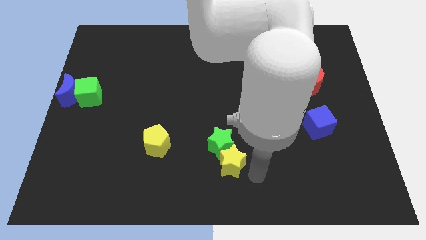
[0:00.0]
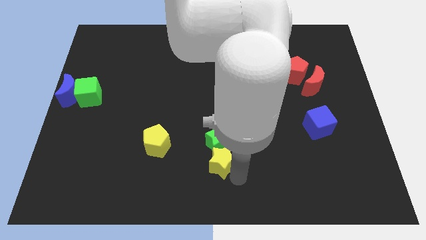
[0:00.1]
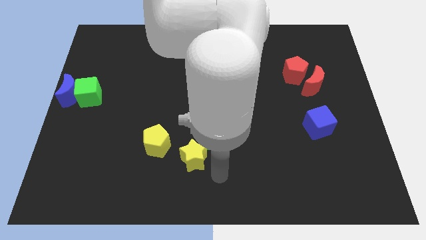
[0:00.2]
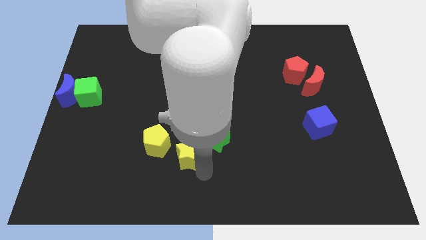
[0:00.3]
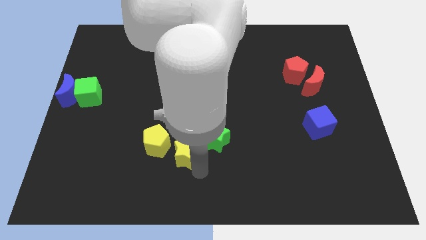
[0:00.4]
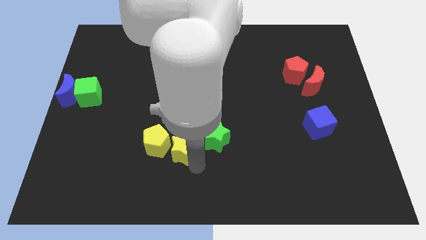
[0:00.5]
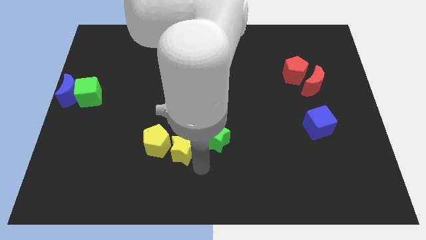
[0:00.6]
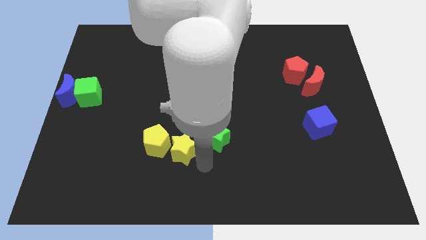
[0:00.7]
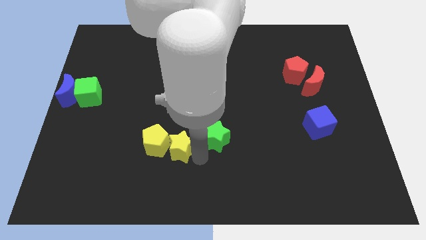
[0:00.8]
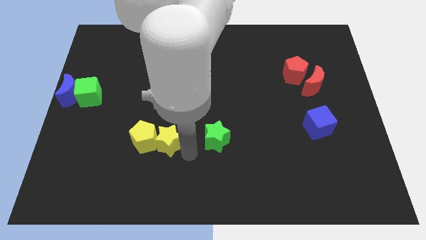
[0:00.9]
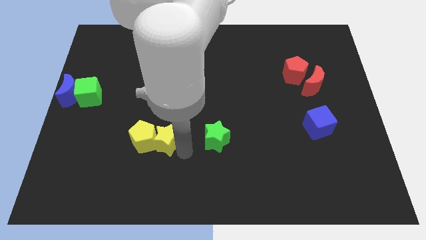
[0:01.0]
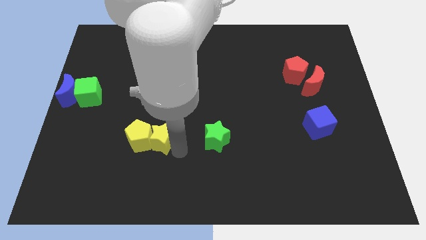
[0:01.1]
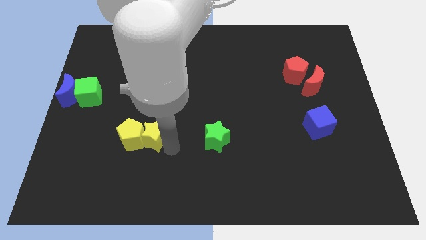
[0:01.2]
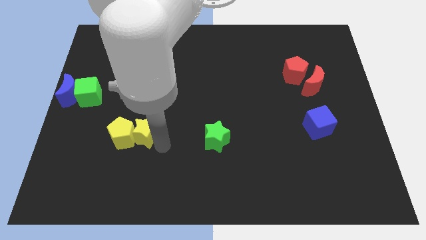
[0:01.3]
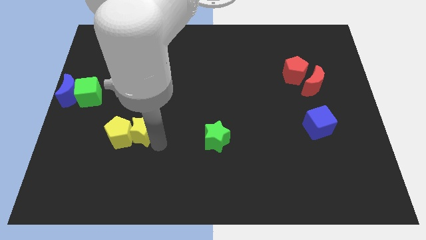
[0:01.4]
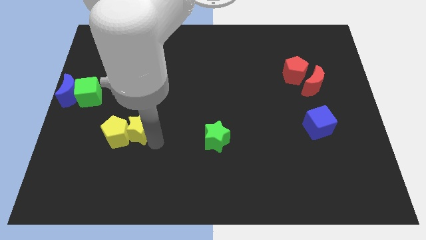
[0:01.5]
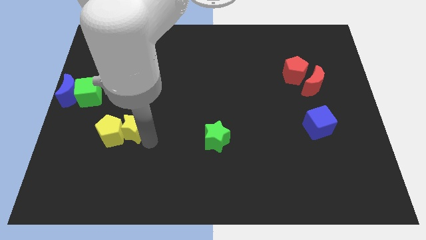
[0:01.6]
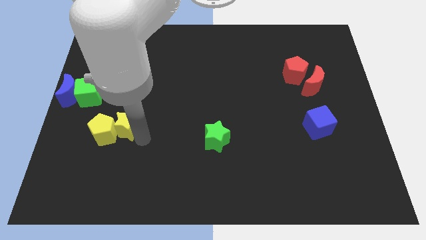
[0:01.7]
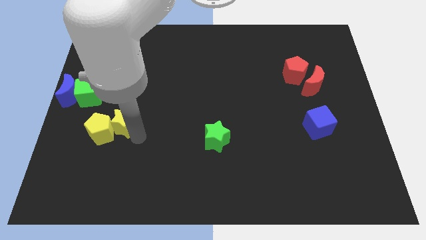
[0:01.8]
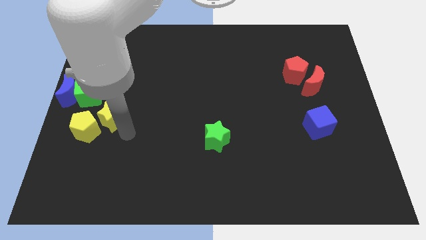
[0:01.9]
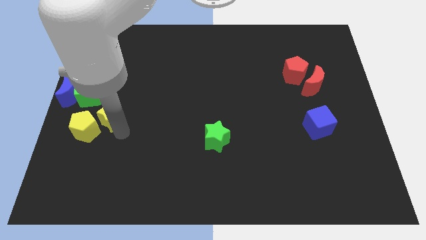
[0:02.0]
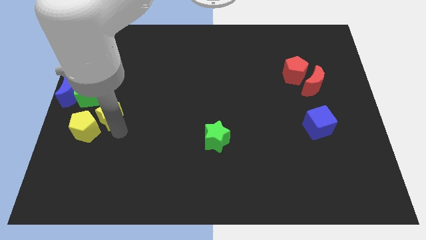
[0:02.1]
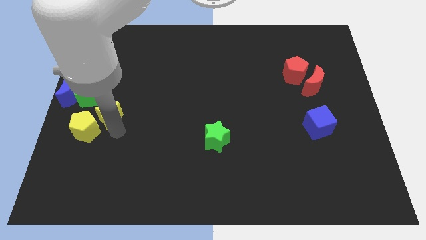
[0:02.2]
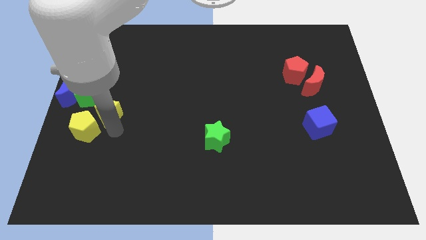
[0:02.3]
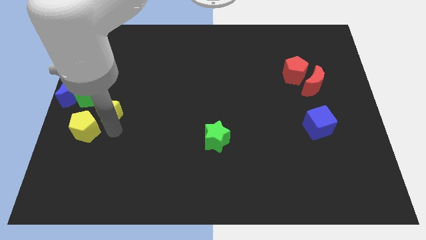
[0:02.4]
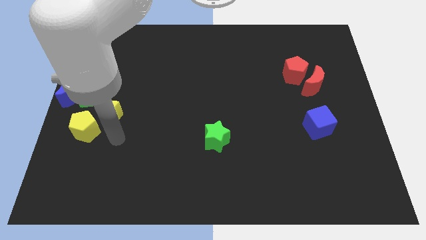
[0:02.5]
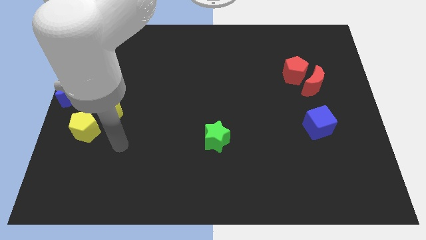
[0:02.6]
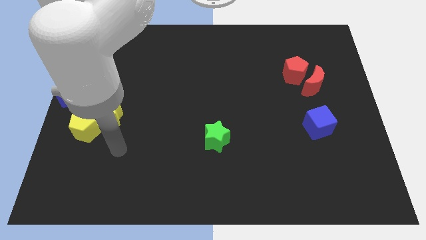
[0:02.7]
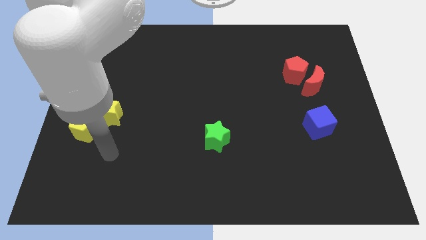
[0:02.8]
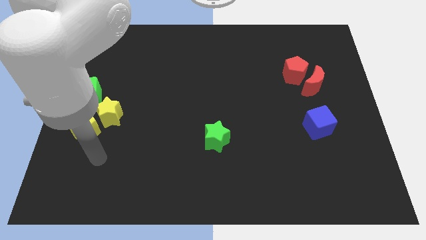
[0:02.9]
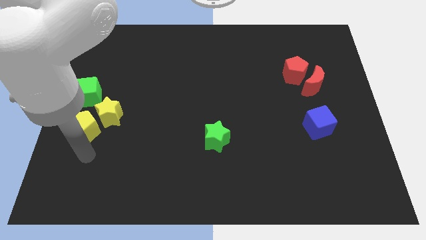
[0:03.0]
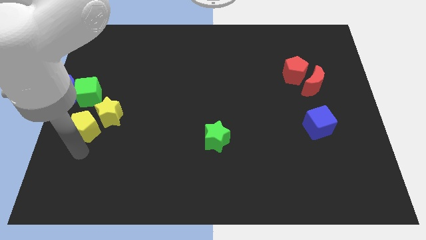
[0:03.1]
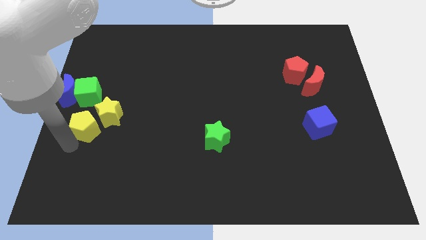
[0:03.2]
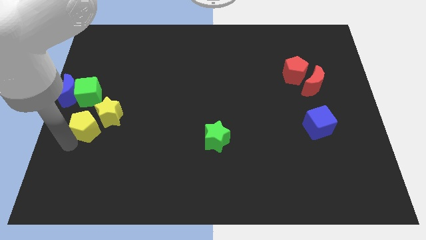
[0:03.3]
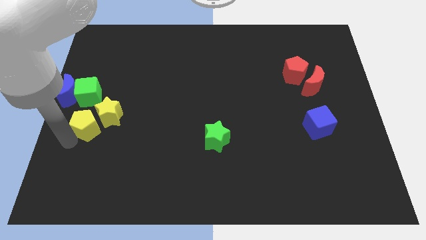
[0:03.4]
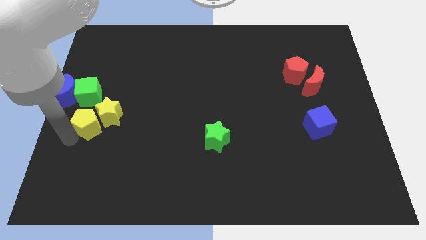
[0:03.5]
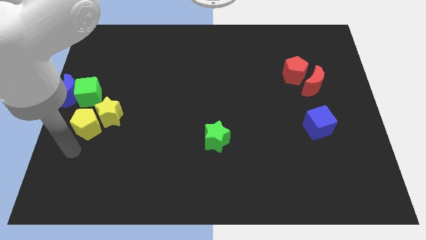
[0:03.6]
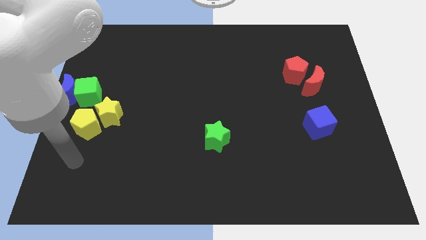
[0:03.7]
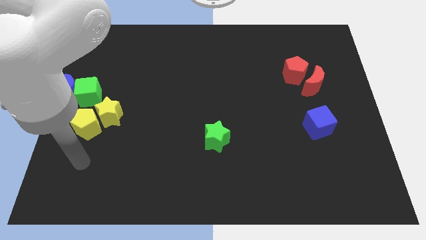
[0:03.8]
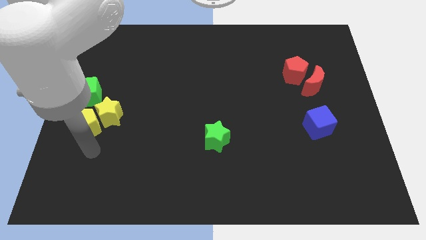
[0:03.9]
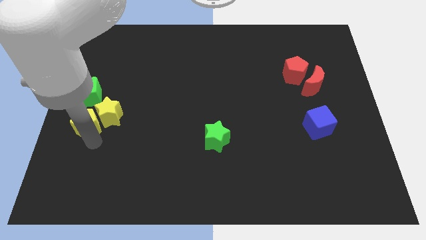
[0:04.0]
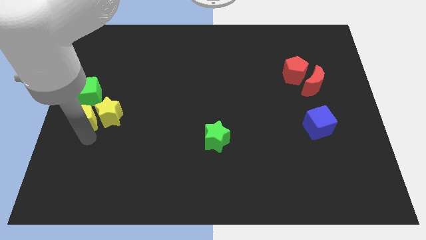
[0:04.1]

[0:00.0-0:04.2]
move the yellow blocks to the bottom of the green cube

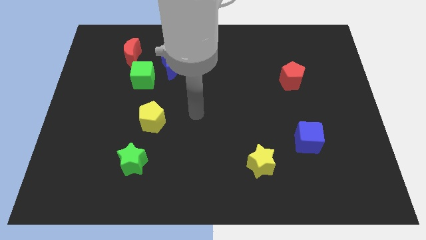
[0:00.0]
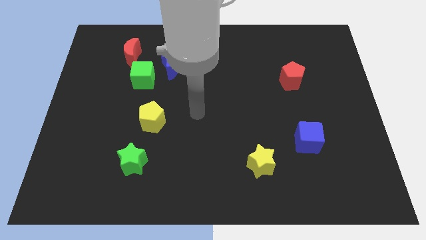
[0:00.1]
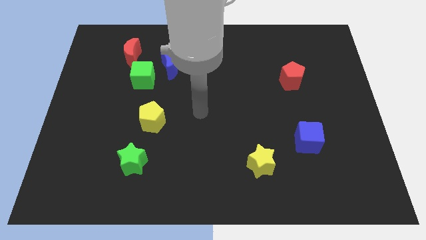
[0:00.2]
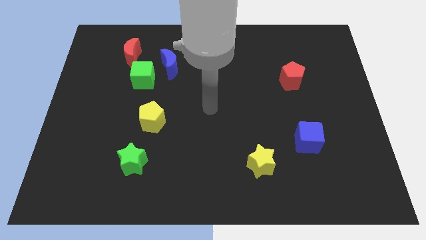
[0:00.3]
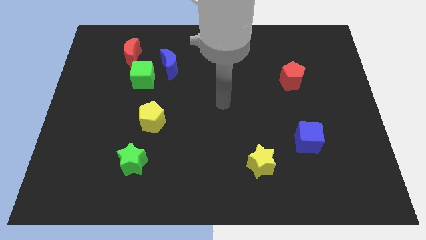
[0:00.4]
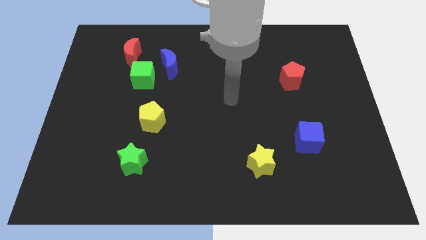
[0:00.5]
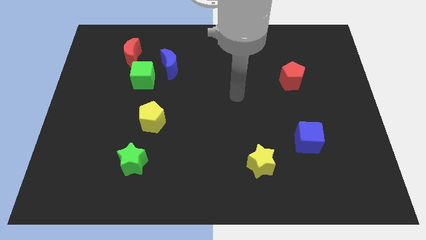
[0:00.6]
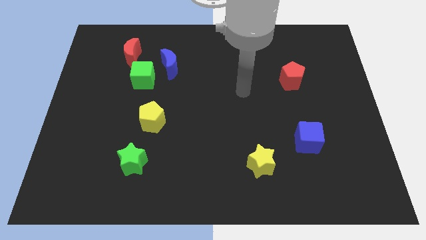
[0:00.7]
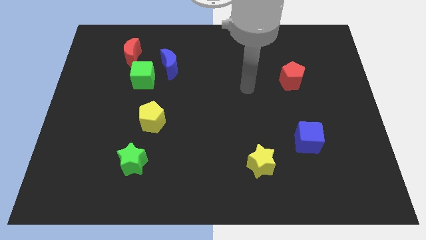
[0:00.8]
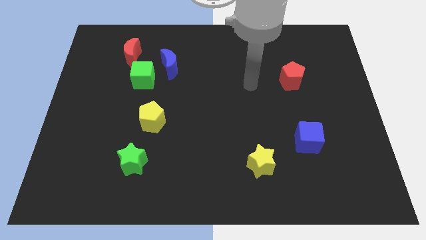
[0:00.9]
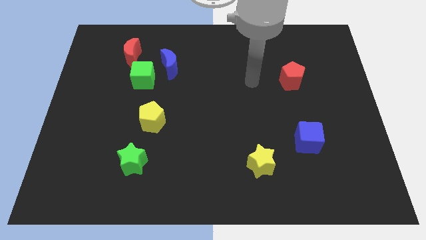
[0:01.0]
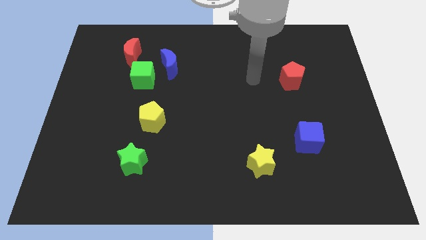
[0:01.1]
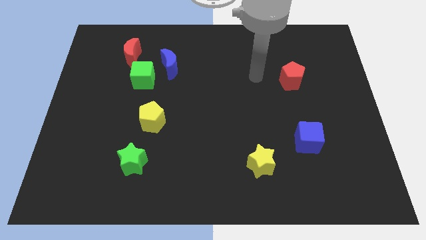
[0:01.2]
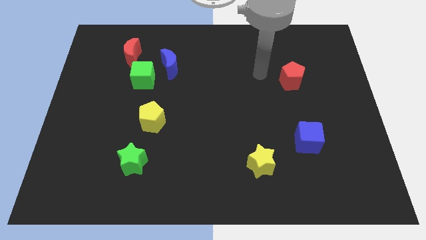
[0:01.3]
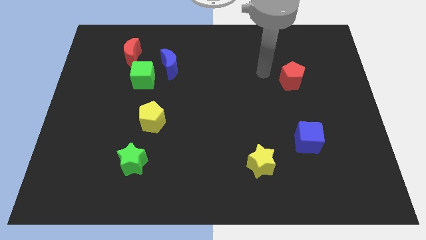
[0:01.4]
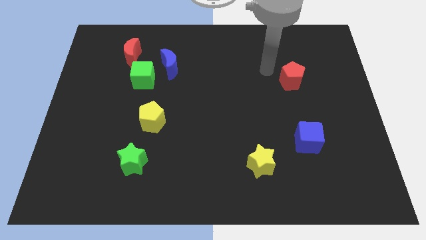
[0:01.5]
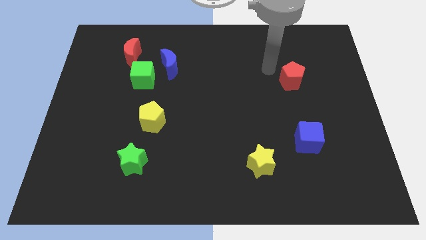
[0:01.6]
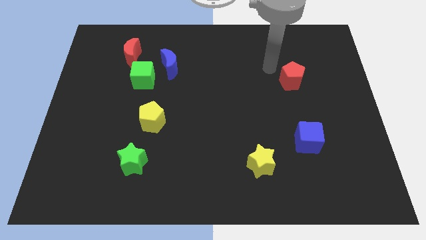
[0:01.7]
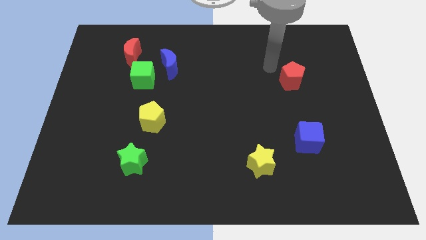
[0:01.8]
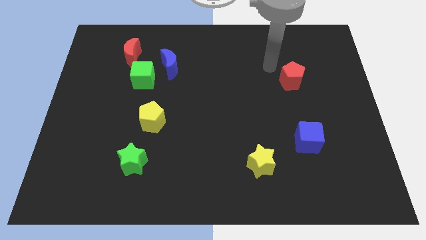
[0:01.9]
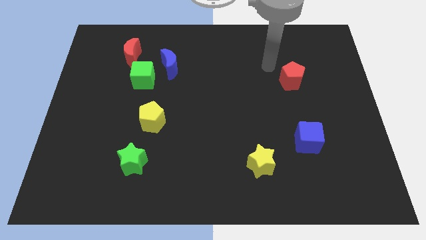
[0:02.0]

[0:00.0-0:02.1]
move arm towards red pentagon

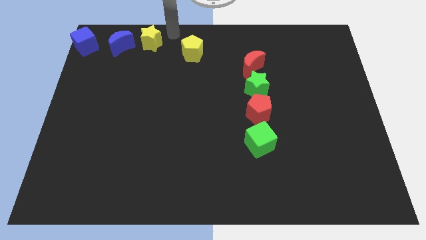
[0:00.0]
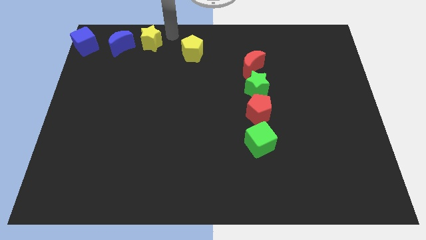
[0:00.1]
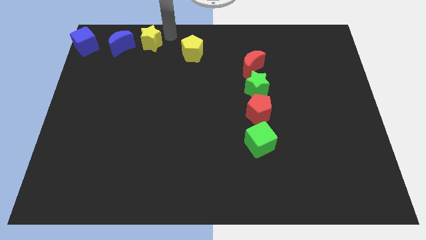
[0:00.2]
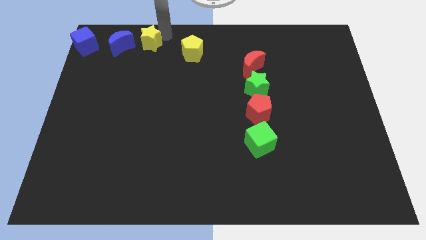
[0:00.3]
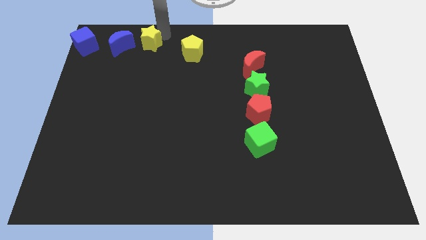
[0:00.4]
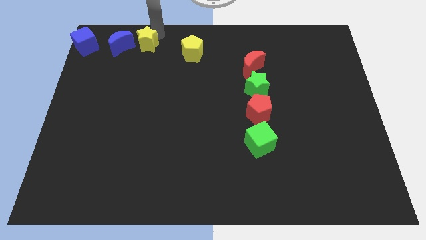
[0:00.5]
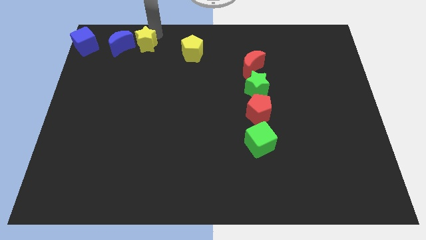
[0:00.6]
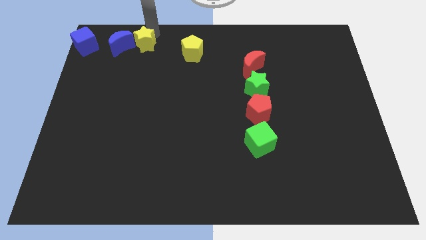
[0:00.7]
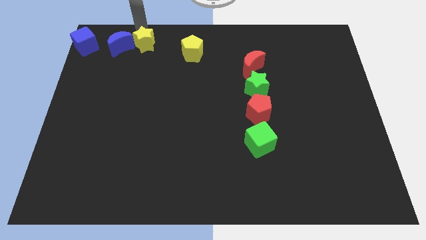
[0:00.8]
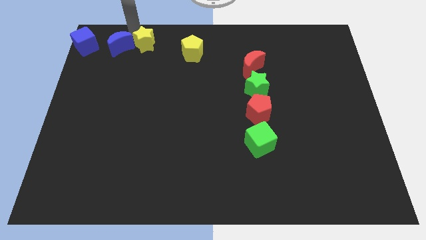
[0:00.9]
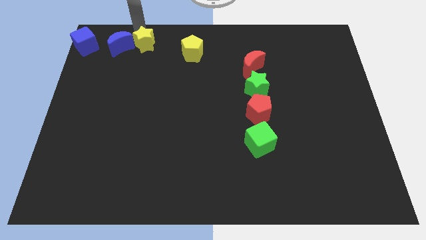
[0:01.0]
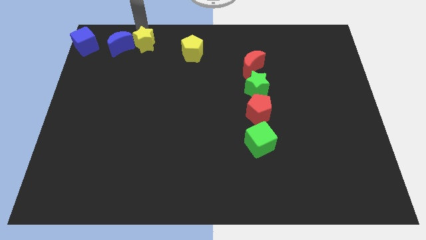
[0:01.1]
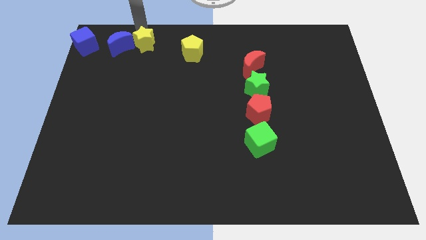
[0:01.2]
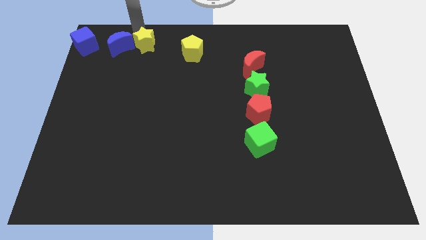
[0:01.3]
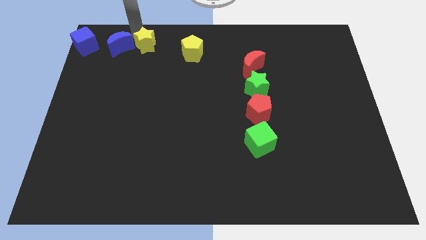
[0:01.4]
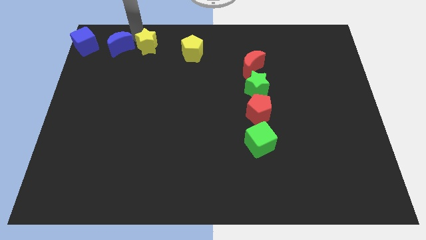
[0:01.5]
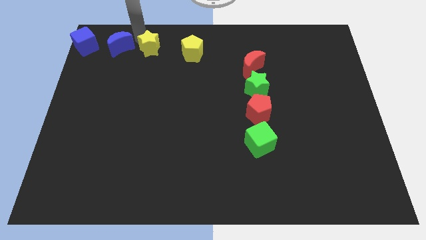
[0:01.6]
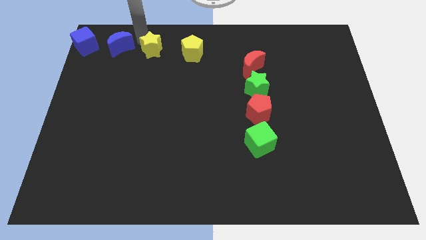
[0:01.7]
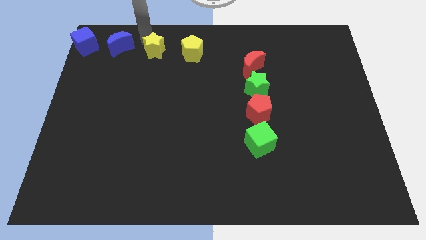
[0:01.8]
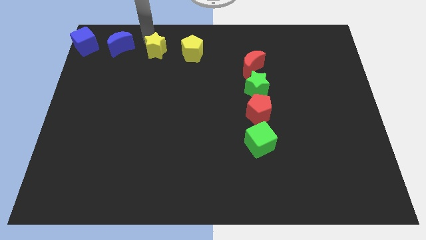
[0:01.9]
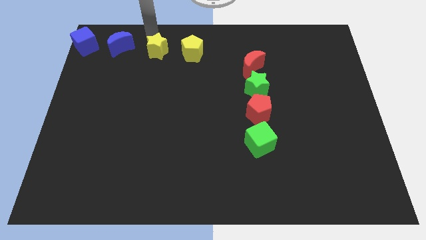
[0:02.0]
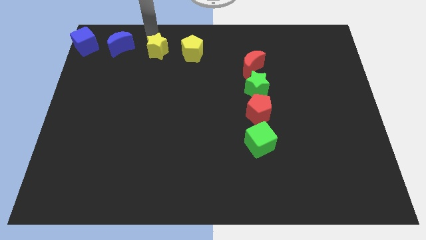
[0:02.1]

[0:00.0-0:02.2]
put the yellow star in between the yellow pentagon and the blue crescent

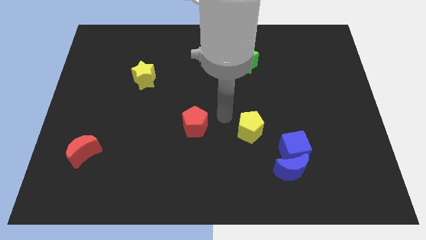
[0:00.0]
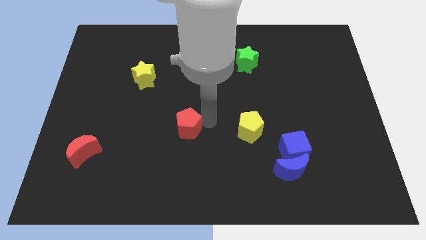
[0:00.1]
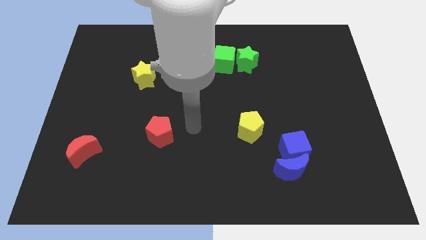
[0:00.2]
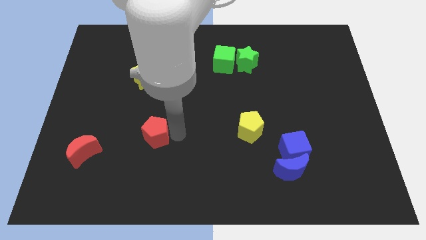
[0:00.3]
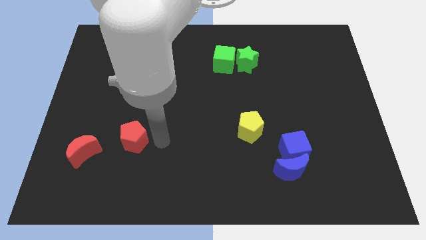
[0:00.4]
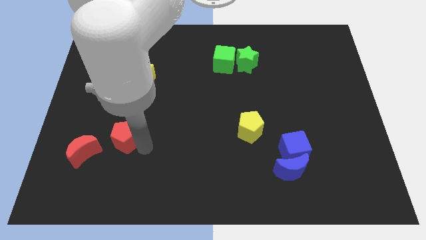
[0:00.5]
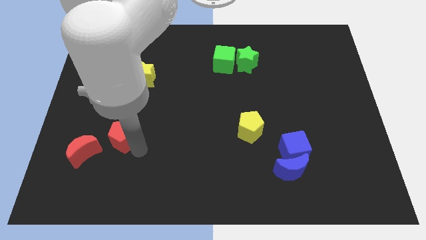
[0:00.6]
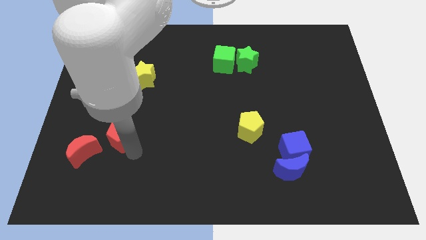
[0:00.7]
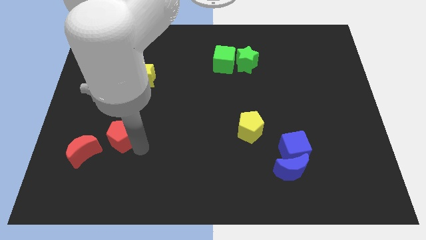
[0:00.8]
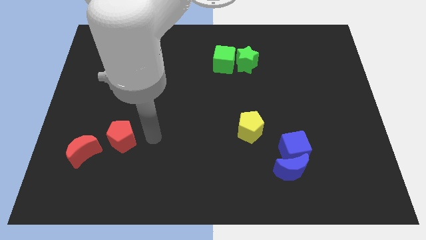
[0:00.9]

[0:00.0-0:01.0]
push the red pentagon towards the red moon
